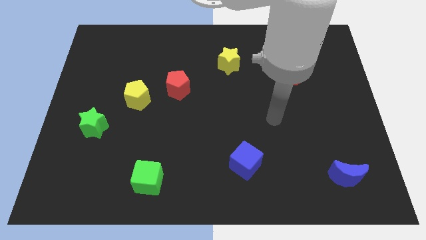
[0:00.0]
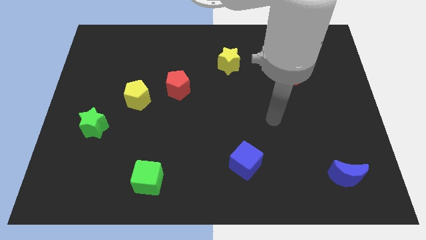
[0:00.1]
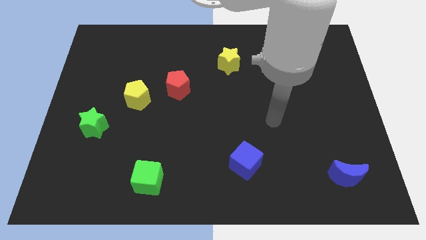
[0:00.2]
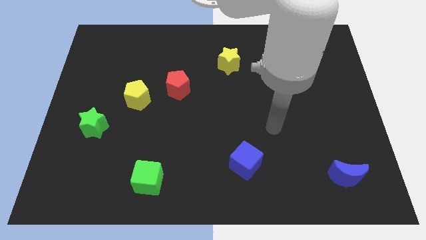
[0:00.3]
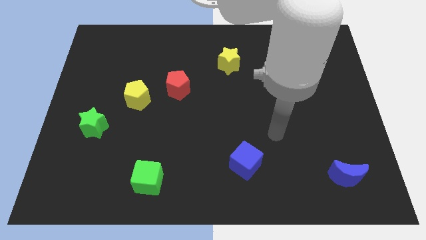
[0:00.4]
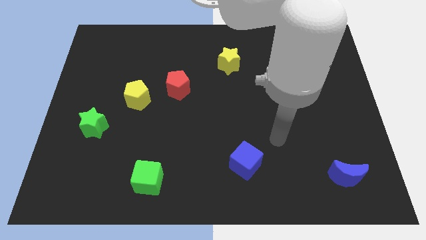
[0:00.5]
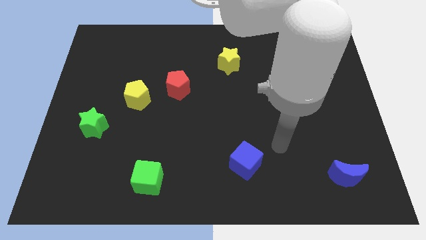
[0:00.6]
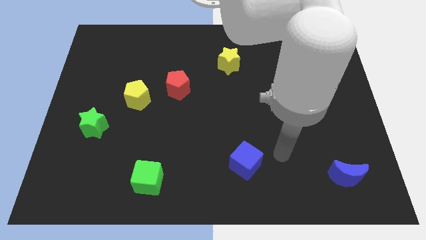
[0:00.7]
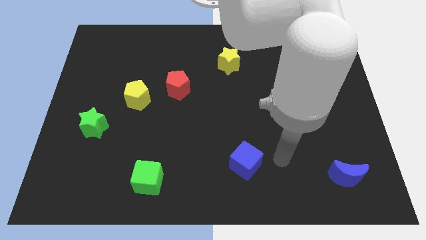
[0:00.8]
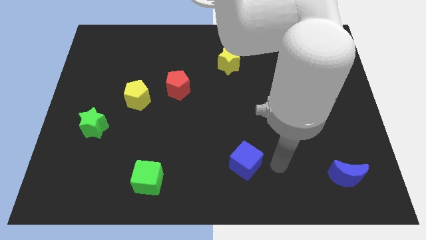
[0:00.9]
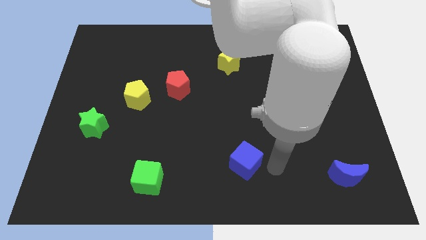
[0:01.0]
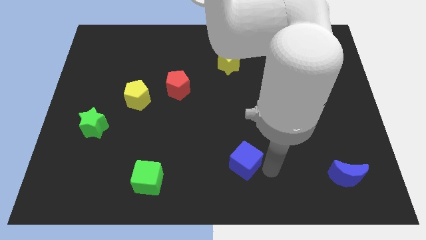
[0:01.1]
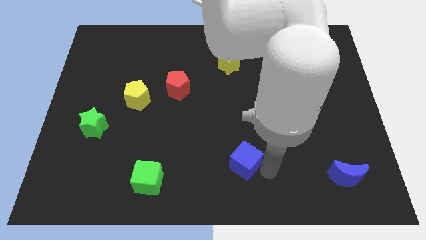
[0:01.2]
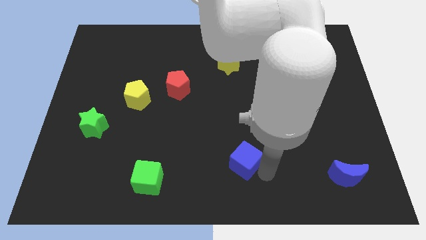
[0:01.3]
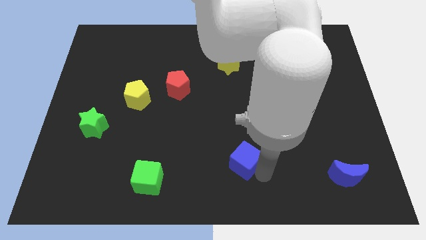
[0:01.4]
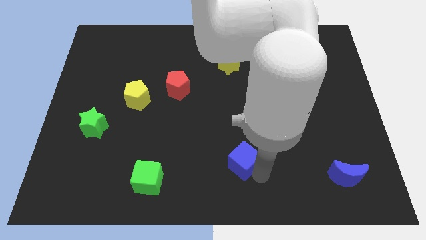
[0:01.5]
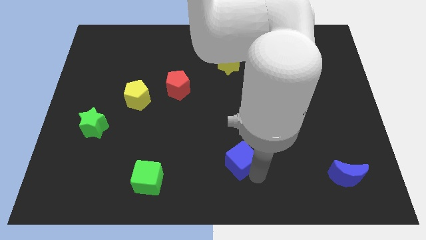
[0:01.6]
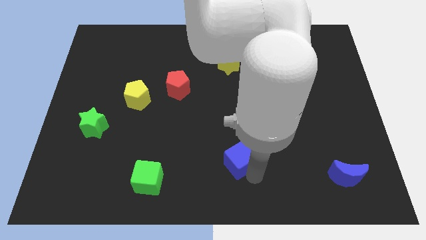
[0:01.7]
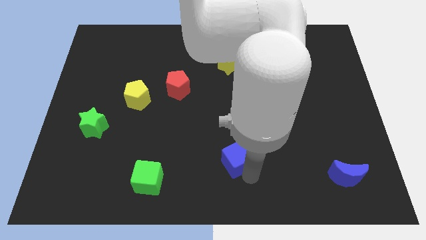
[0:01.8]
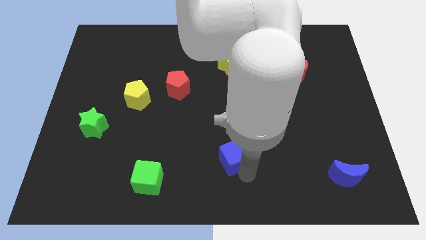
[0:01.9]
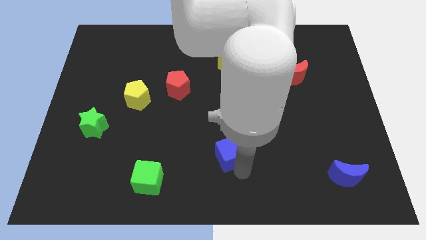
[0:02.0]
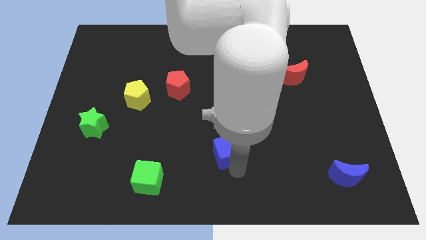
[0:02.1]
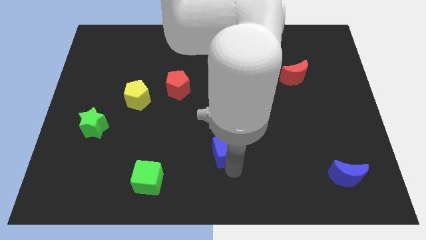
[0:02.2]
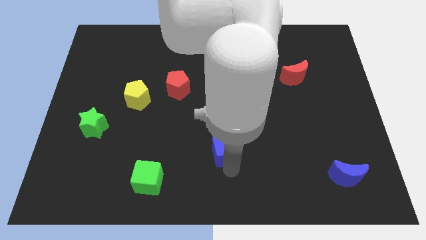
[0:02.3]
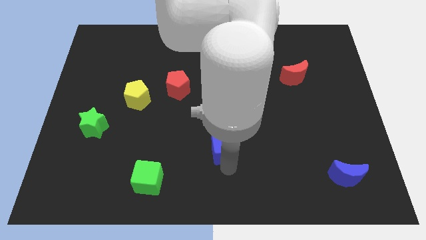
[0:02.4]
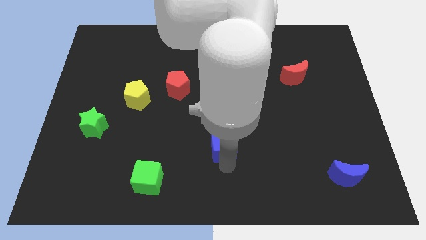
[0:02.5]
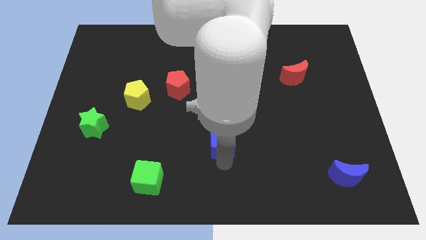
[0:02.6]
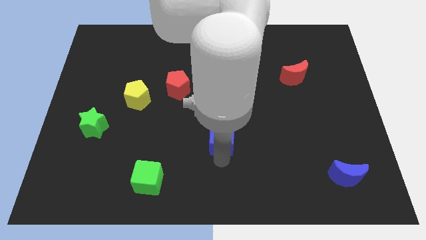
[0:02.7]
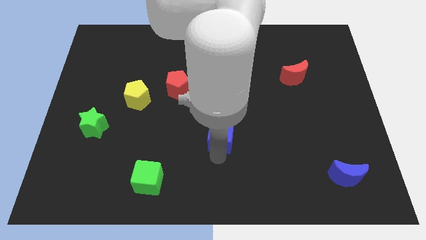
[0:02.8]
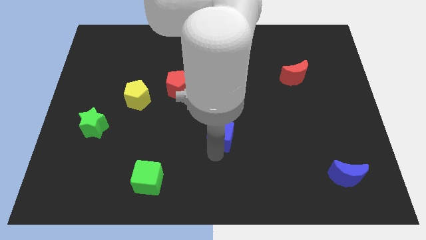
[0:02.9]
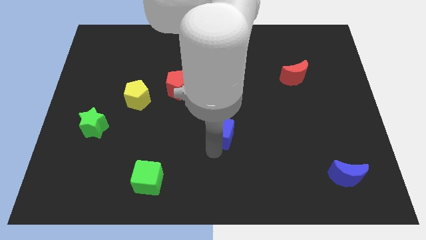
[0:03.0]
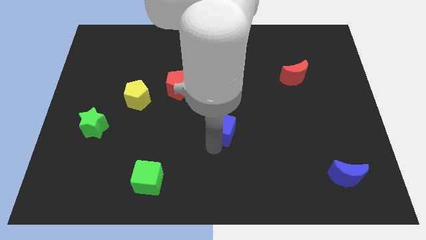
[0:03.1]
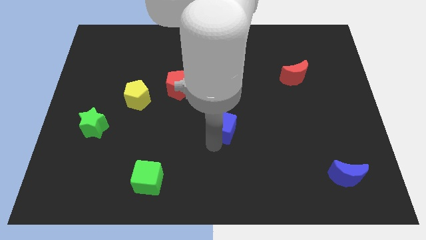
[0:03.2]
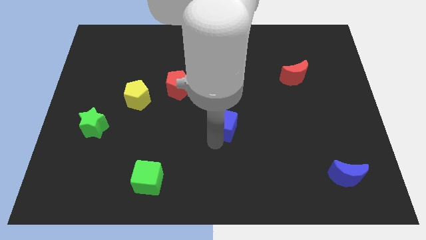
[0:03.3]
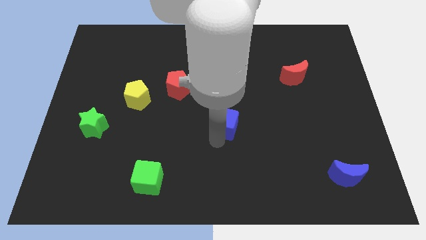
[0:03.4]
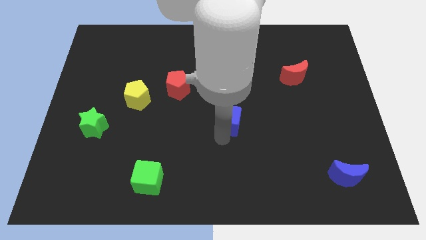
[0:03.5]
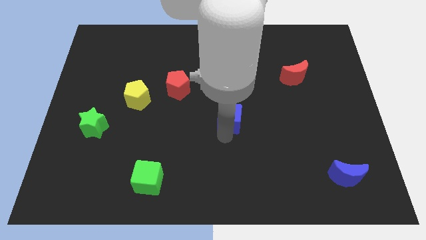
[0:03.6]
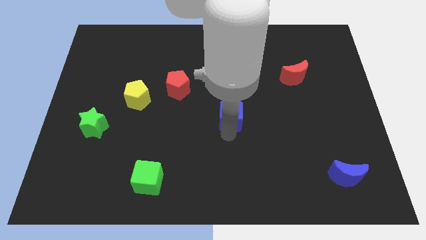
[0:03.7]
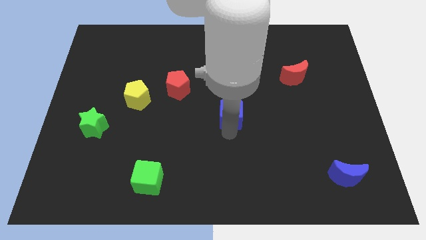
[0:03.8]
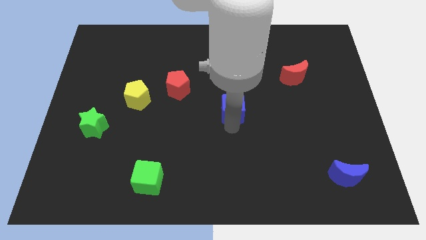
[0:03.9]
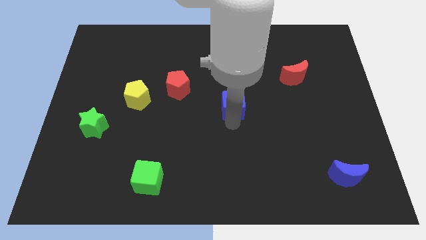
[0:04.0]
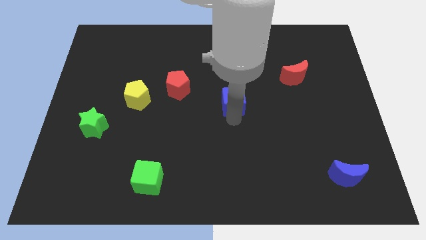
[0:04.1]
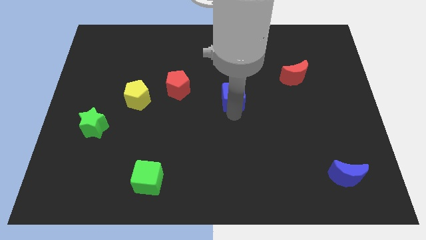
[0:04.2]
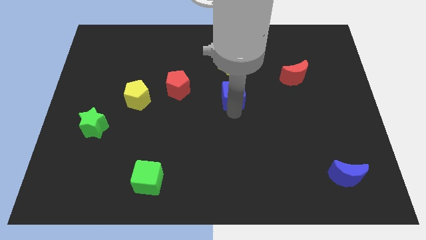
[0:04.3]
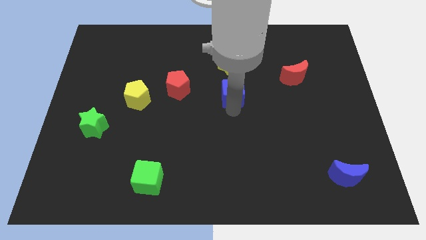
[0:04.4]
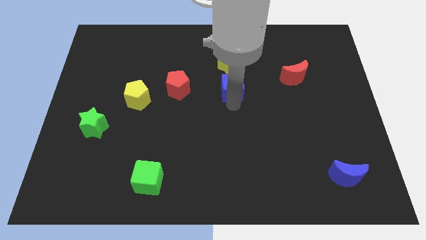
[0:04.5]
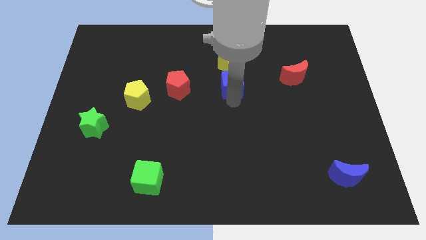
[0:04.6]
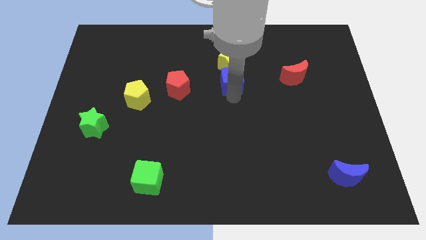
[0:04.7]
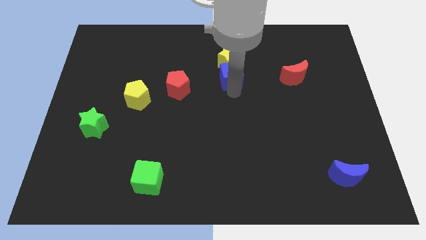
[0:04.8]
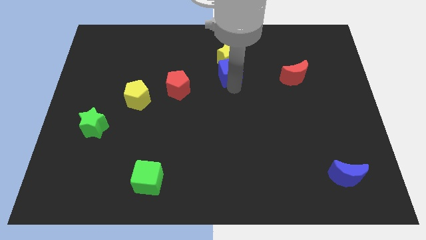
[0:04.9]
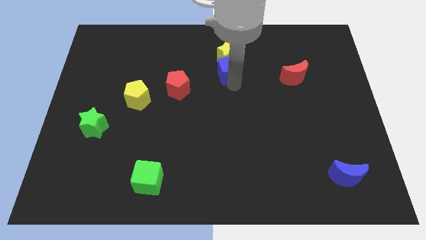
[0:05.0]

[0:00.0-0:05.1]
push the blue cube towards the yellow star

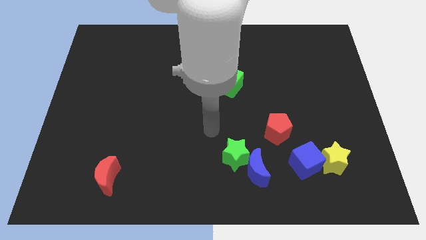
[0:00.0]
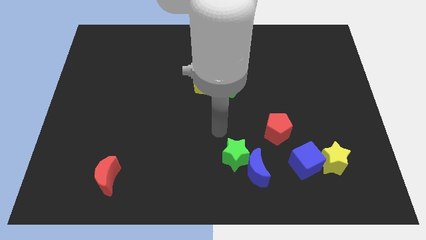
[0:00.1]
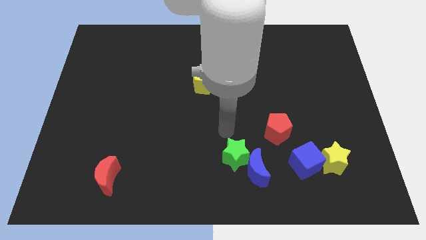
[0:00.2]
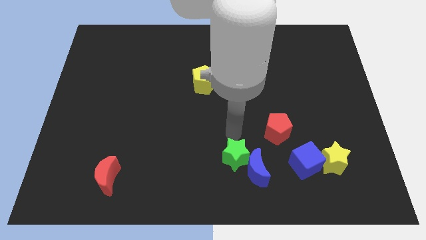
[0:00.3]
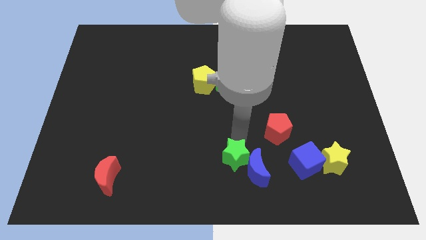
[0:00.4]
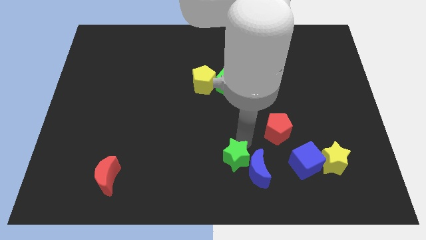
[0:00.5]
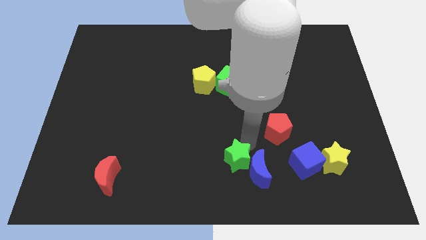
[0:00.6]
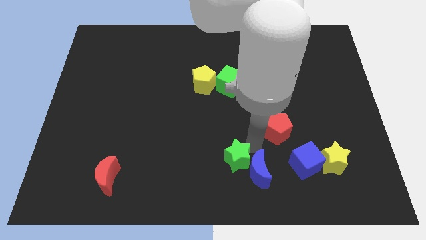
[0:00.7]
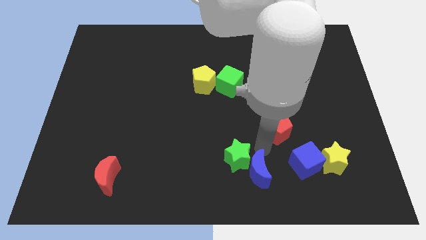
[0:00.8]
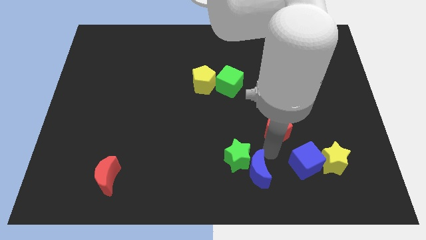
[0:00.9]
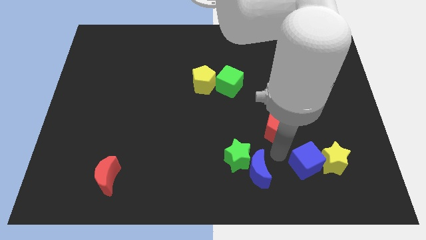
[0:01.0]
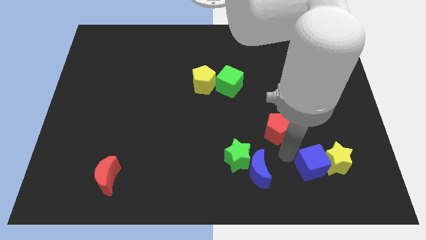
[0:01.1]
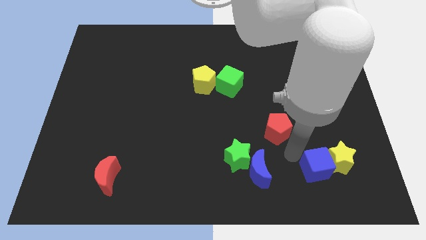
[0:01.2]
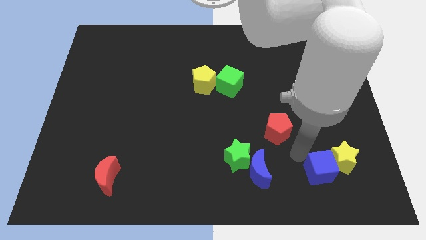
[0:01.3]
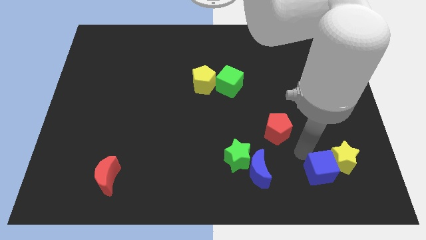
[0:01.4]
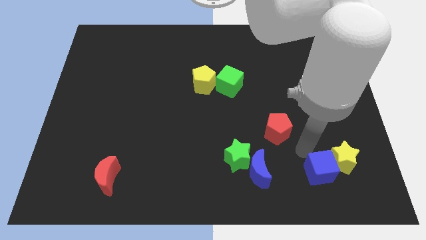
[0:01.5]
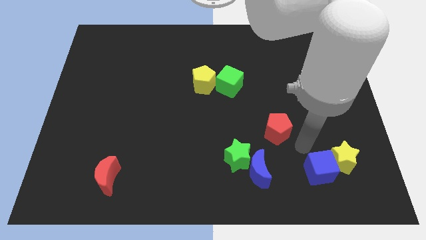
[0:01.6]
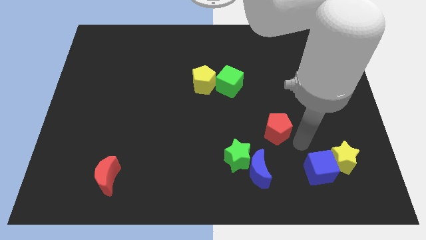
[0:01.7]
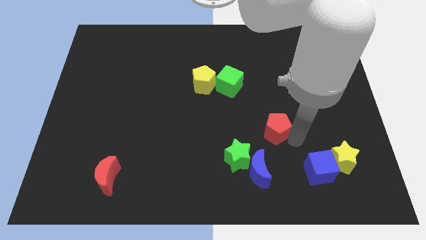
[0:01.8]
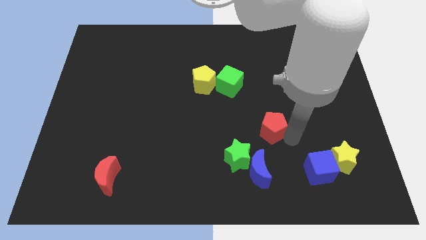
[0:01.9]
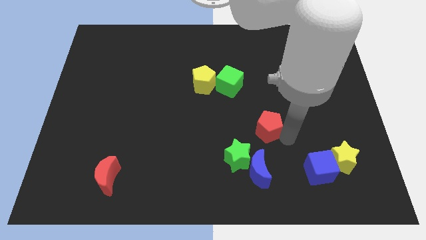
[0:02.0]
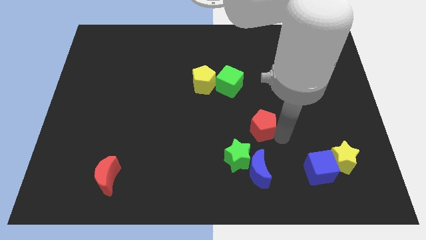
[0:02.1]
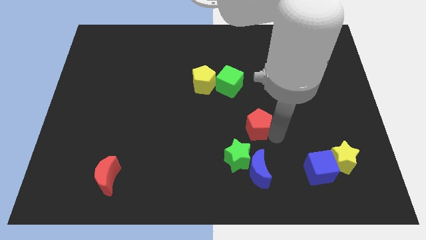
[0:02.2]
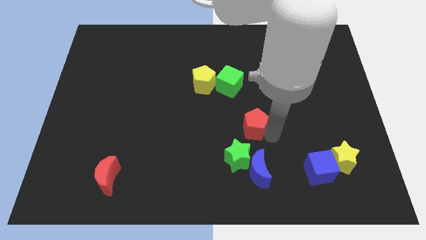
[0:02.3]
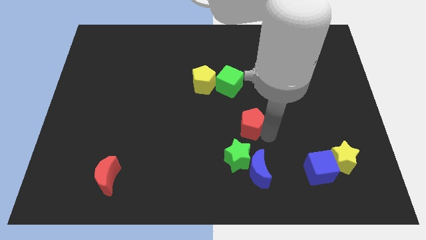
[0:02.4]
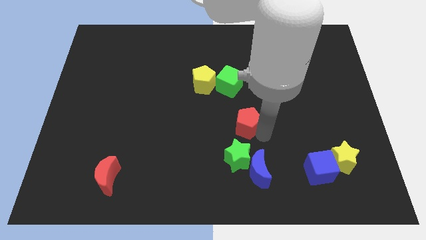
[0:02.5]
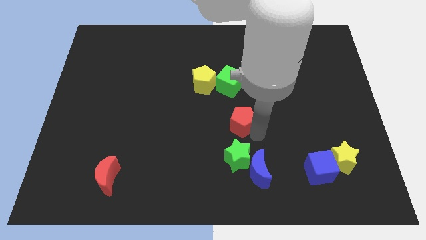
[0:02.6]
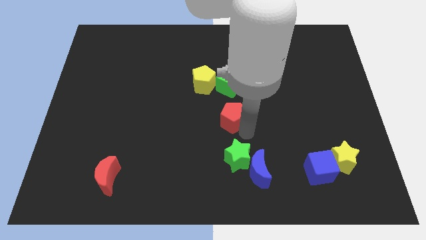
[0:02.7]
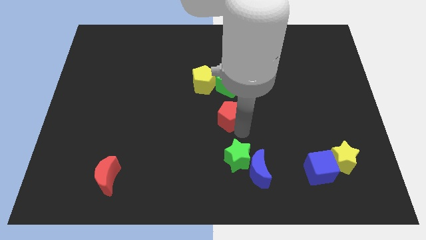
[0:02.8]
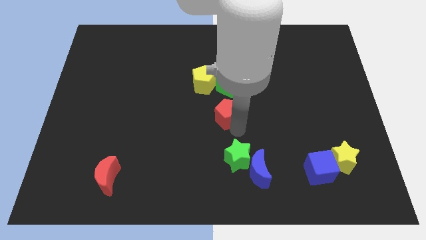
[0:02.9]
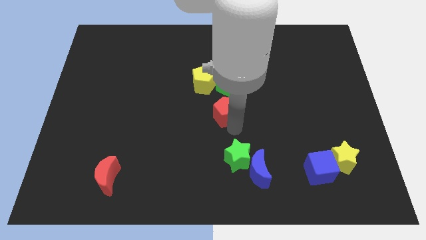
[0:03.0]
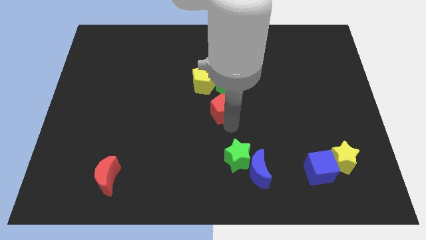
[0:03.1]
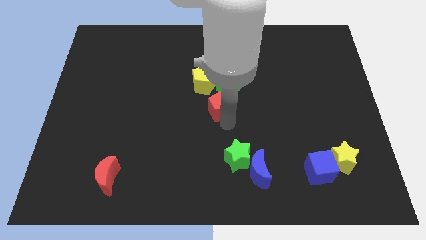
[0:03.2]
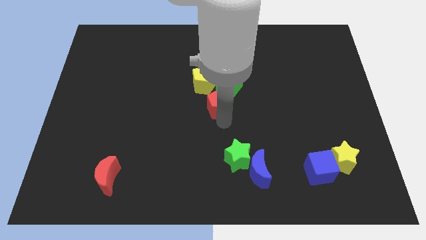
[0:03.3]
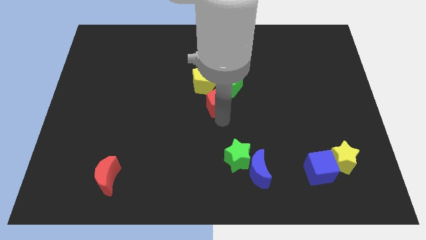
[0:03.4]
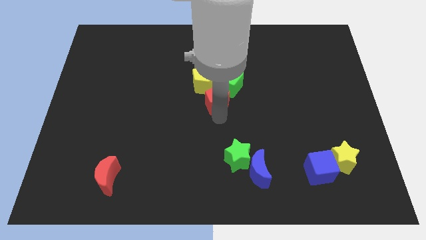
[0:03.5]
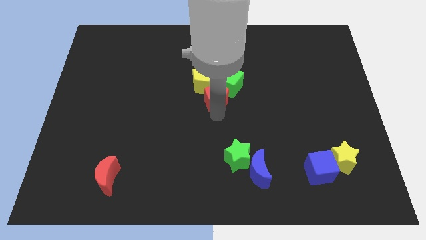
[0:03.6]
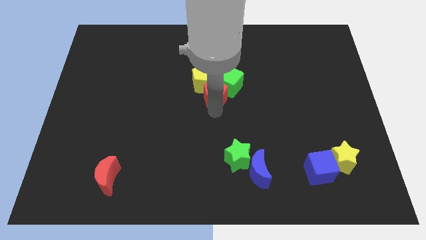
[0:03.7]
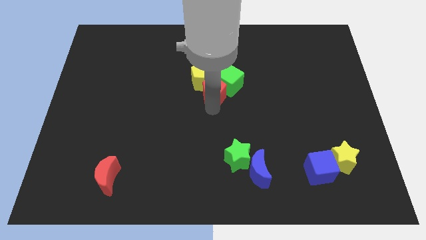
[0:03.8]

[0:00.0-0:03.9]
push the red pentagon towards the yellow pentagon
